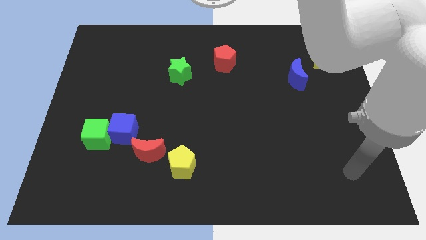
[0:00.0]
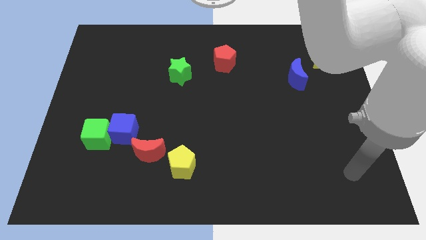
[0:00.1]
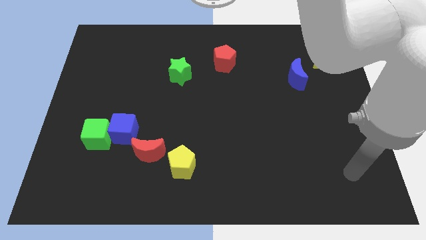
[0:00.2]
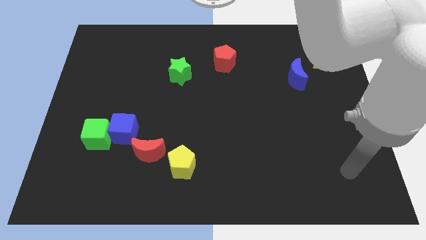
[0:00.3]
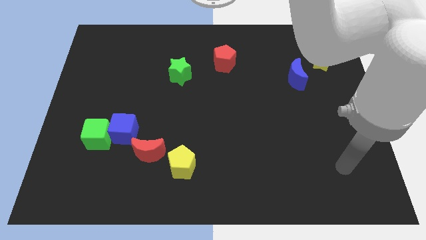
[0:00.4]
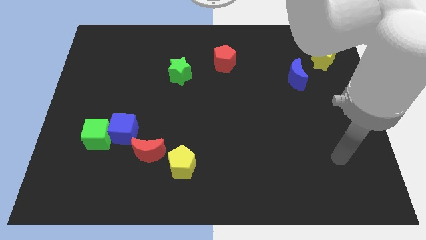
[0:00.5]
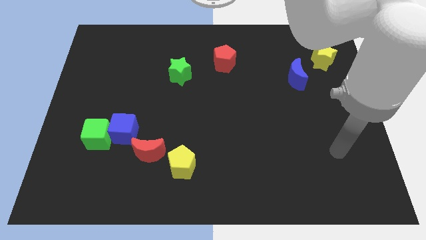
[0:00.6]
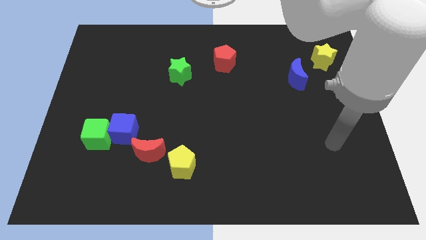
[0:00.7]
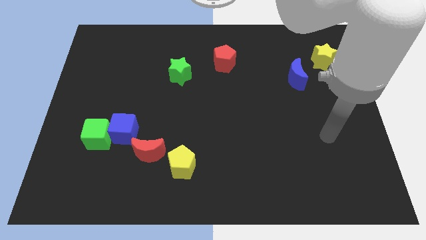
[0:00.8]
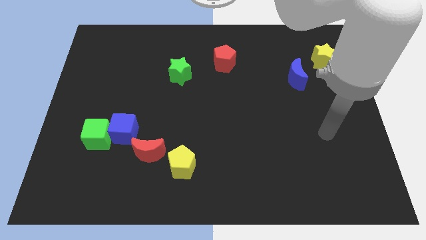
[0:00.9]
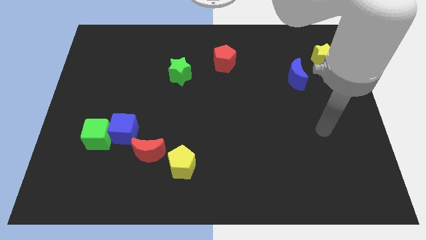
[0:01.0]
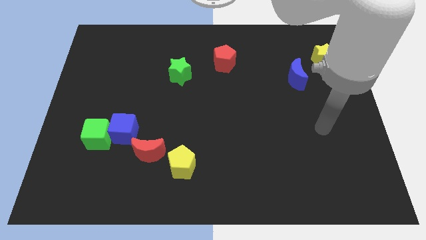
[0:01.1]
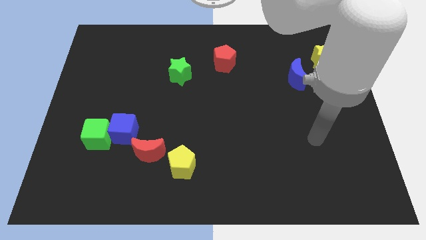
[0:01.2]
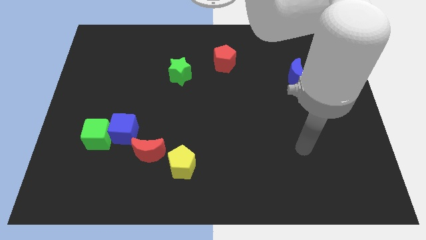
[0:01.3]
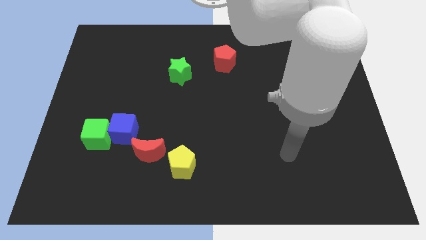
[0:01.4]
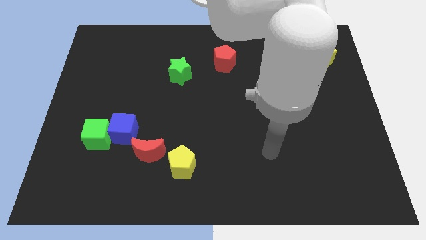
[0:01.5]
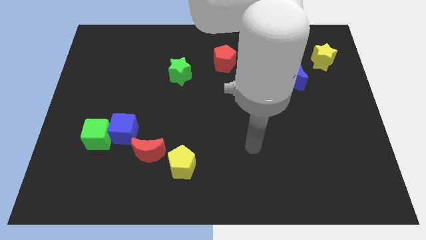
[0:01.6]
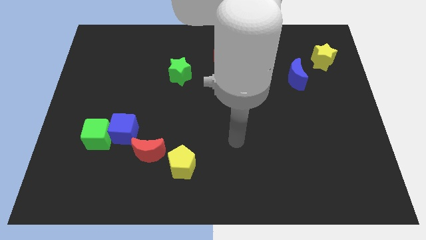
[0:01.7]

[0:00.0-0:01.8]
move your arm towards the left side of the board

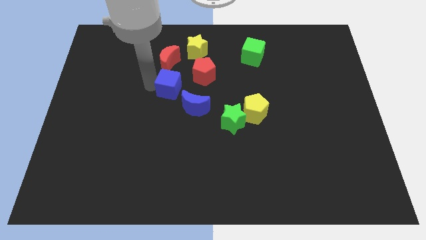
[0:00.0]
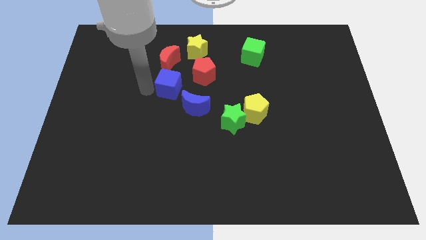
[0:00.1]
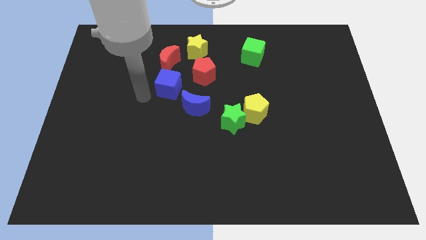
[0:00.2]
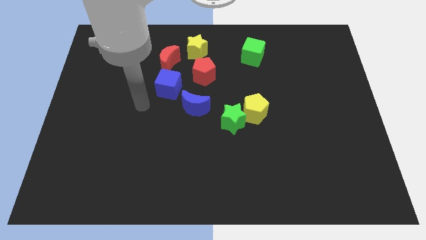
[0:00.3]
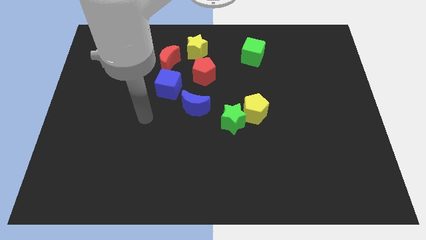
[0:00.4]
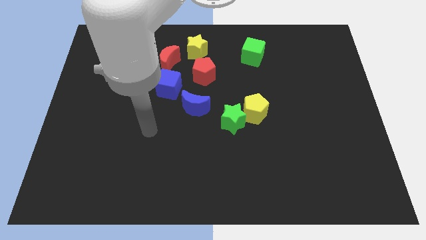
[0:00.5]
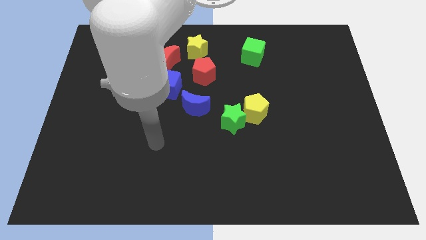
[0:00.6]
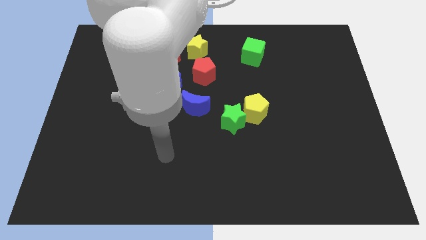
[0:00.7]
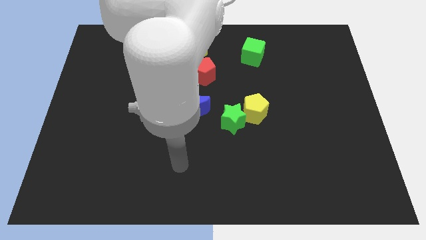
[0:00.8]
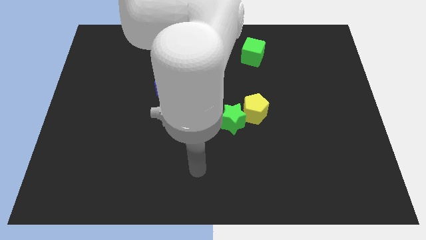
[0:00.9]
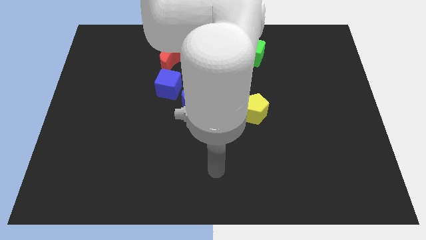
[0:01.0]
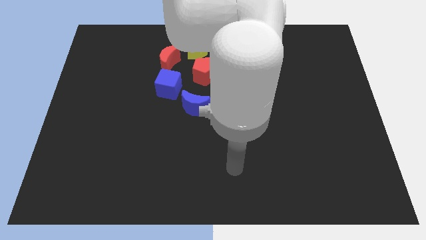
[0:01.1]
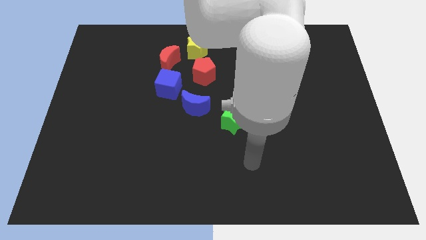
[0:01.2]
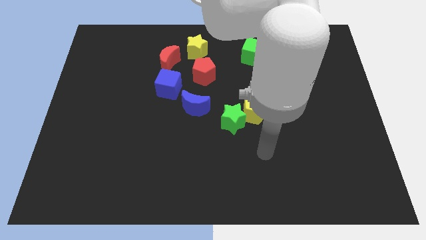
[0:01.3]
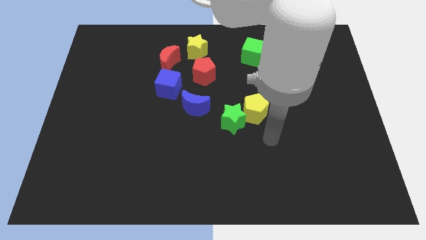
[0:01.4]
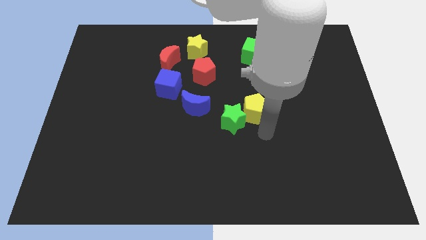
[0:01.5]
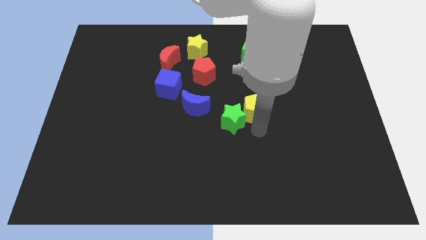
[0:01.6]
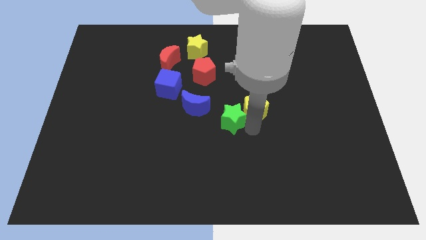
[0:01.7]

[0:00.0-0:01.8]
point your arm diagonal below the green star

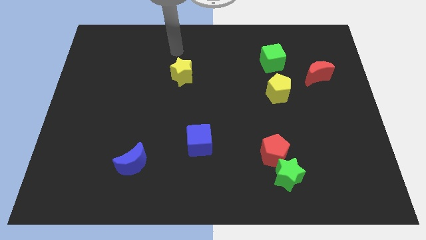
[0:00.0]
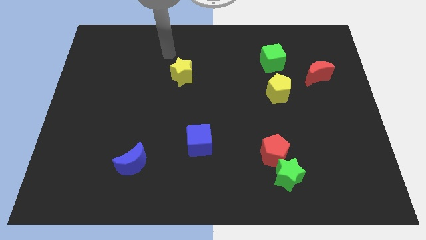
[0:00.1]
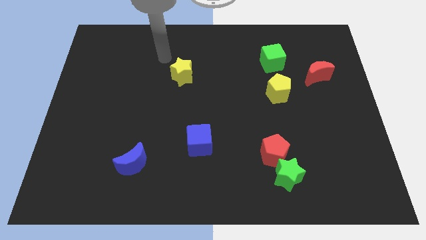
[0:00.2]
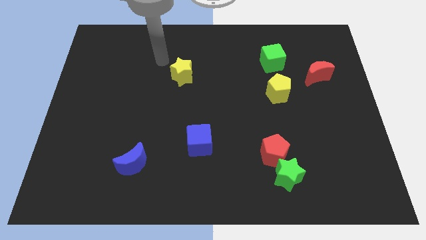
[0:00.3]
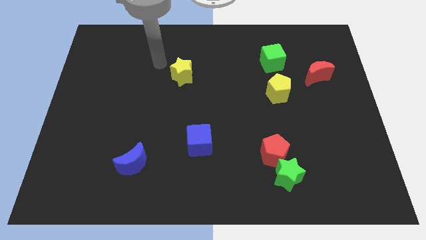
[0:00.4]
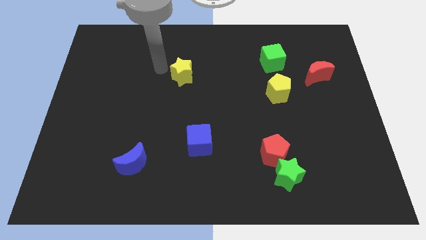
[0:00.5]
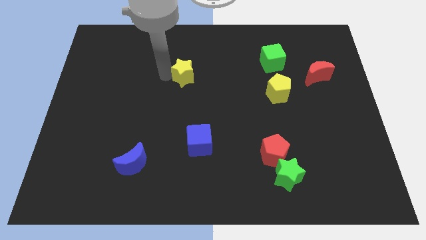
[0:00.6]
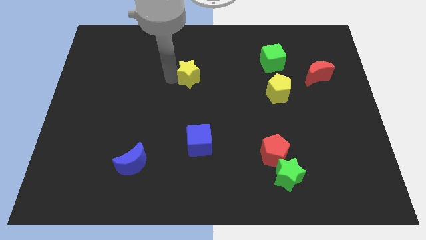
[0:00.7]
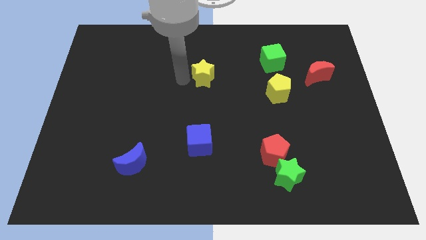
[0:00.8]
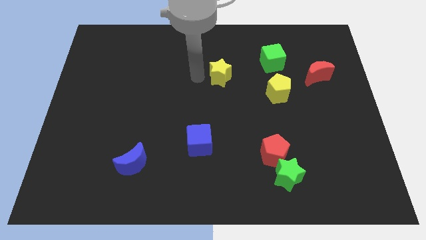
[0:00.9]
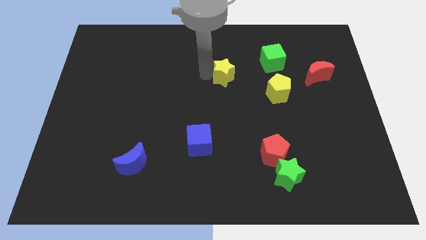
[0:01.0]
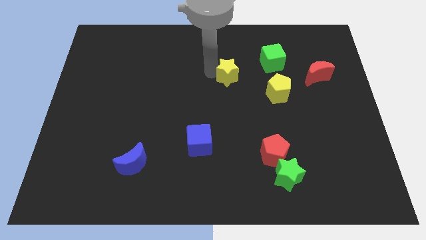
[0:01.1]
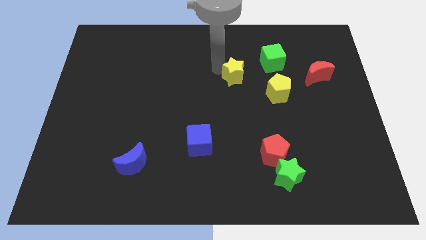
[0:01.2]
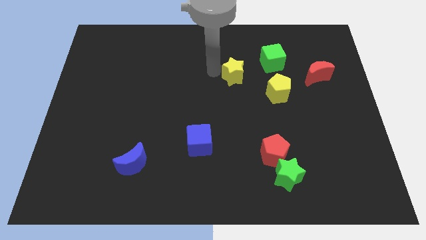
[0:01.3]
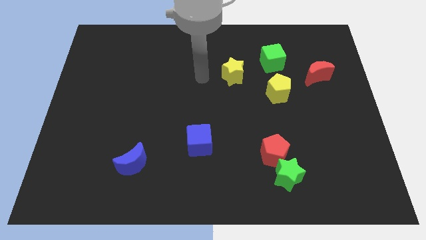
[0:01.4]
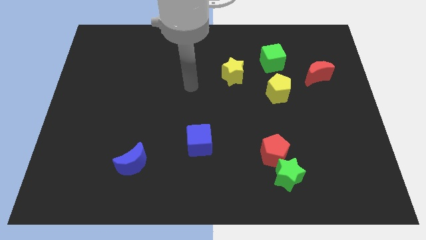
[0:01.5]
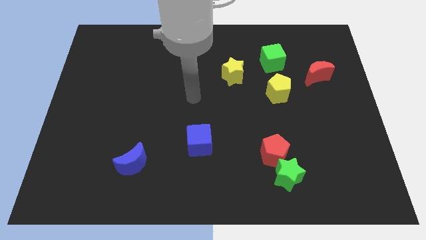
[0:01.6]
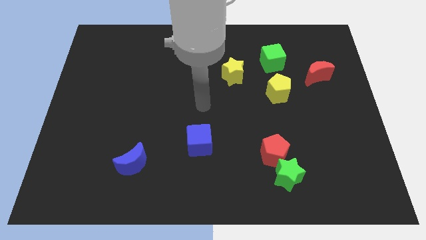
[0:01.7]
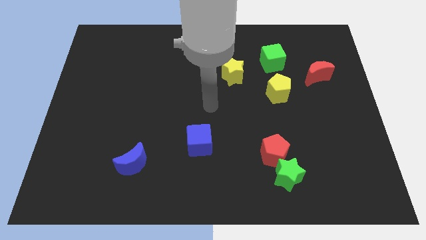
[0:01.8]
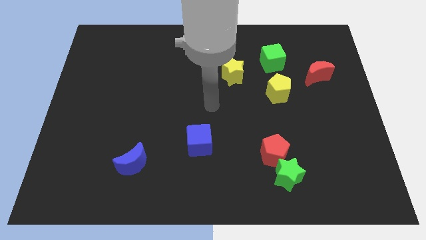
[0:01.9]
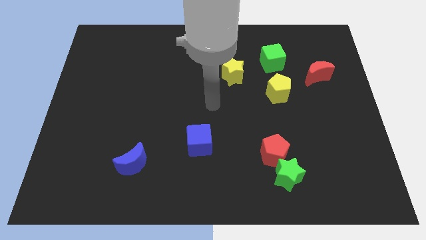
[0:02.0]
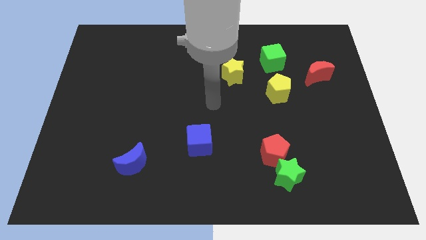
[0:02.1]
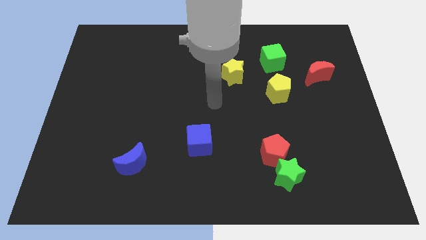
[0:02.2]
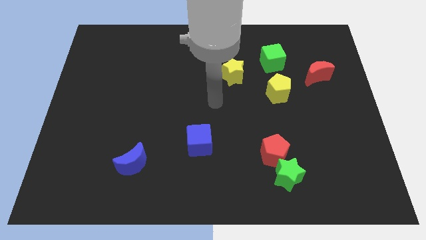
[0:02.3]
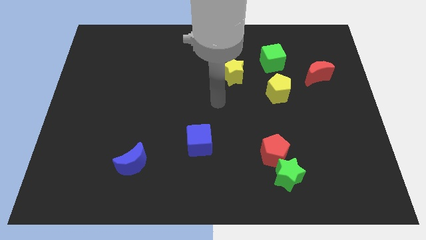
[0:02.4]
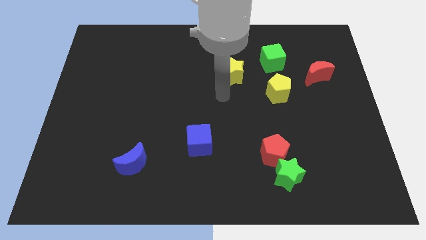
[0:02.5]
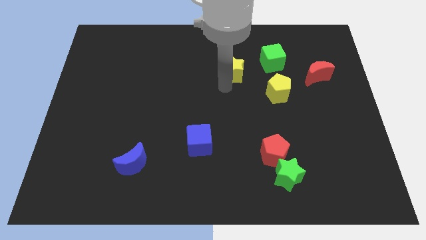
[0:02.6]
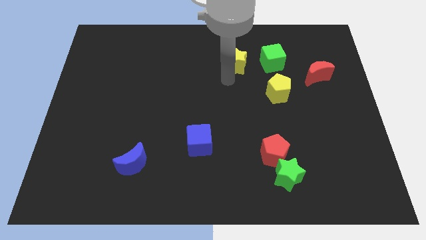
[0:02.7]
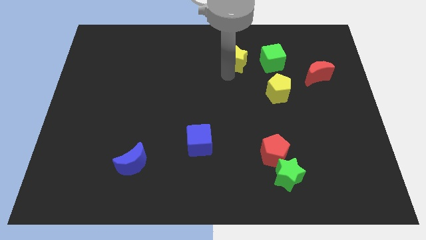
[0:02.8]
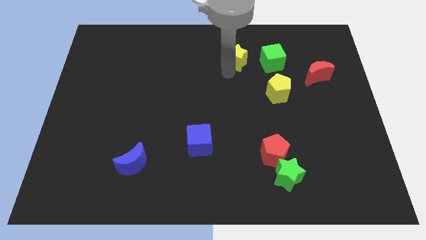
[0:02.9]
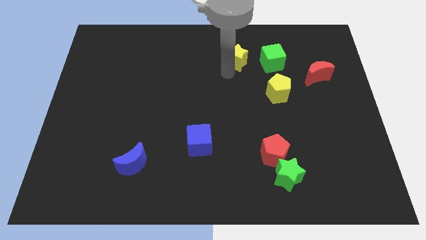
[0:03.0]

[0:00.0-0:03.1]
put the yellow star at the left side of the green cube

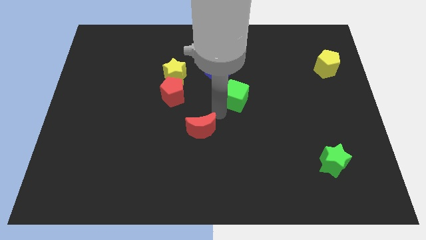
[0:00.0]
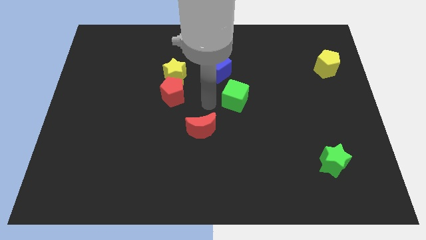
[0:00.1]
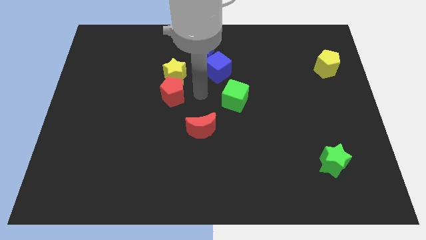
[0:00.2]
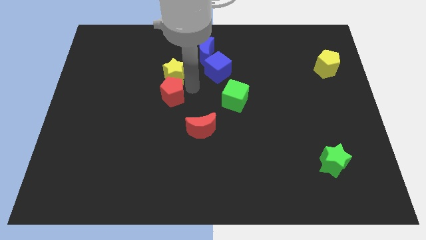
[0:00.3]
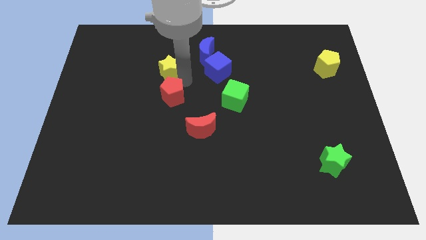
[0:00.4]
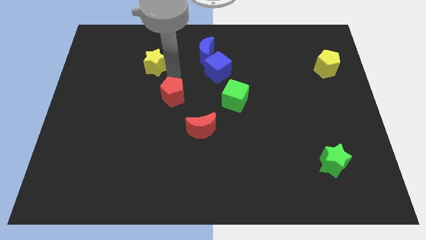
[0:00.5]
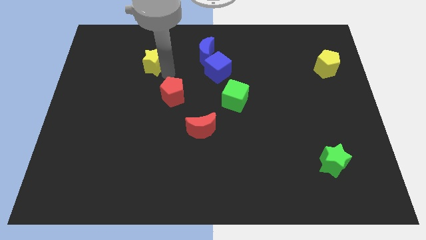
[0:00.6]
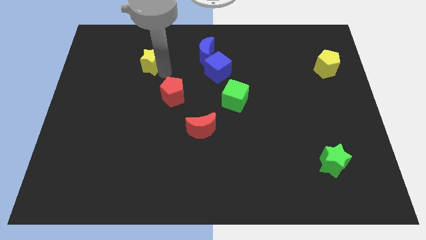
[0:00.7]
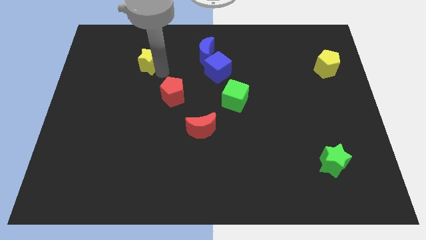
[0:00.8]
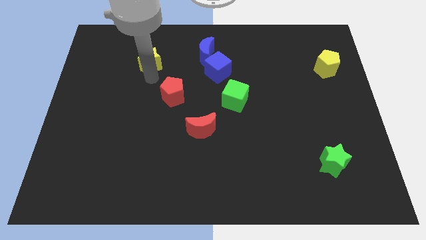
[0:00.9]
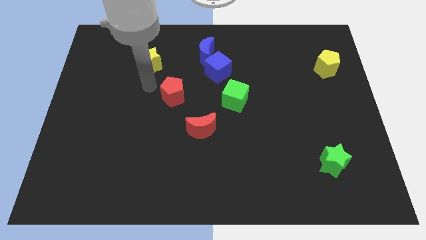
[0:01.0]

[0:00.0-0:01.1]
separate yellow star from red pentagon

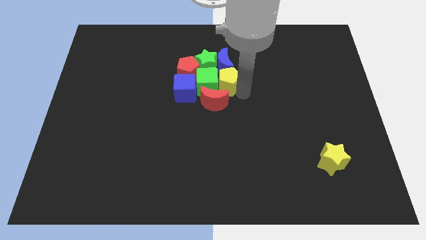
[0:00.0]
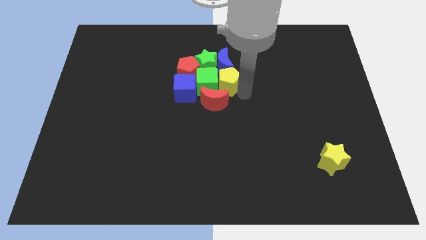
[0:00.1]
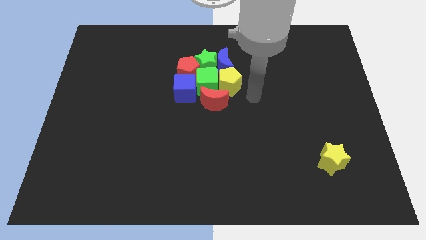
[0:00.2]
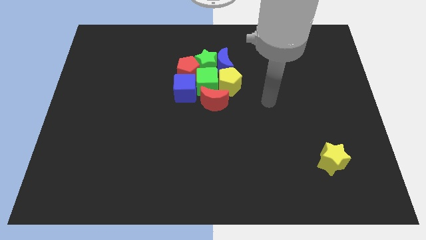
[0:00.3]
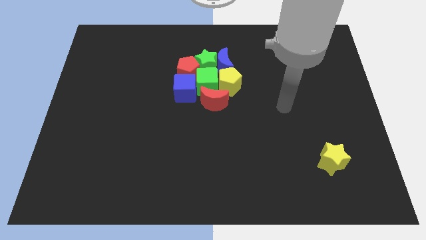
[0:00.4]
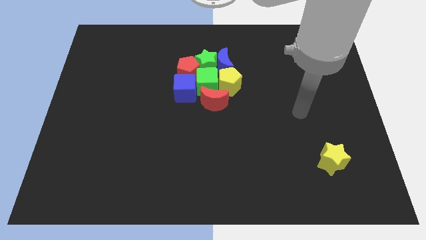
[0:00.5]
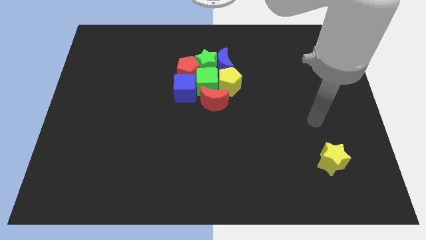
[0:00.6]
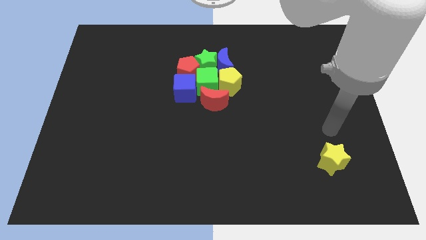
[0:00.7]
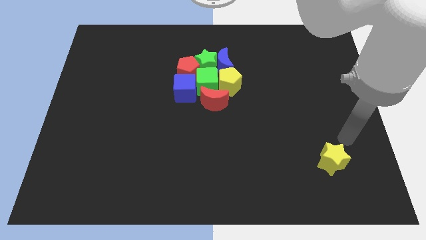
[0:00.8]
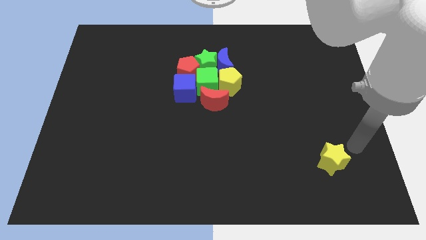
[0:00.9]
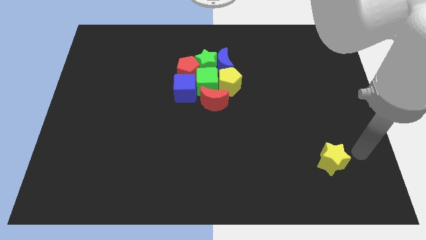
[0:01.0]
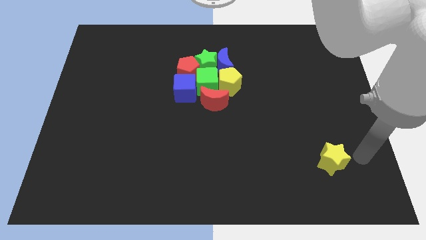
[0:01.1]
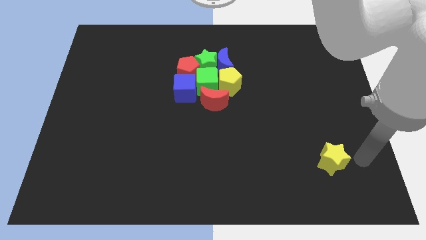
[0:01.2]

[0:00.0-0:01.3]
point your arm at the right side of the yellow star

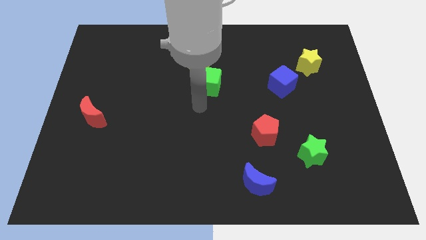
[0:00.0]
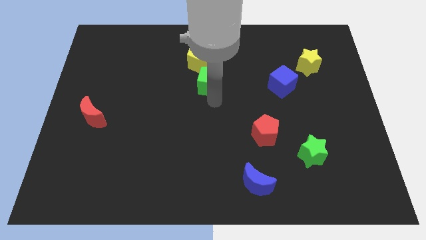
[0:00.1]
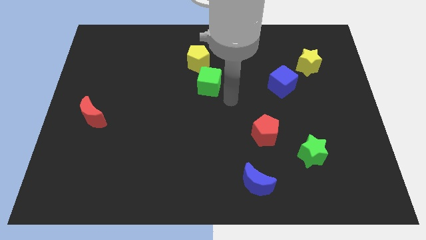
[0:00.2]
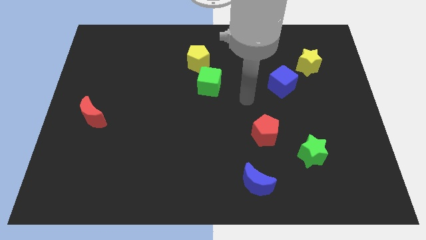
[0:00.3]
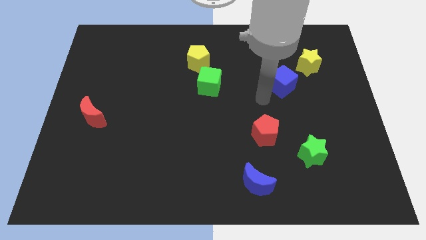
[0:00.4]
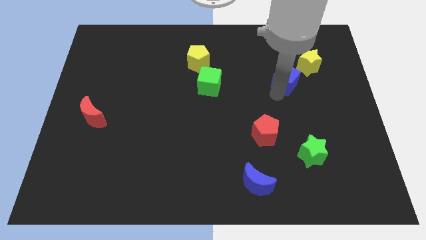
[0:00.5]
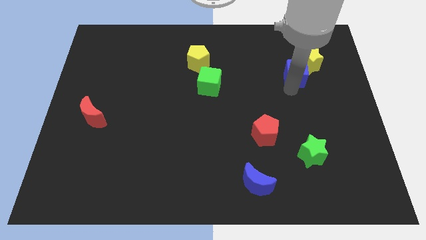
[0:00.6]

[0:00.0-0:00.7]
push the blue cube into the yellow star
